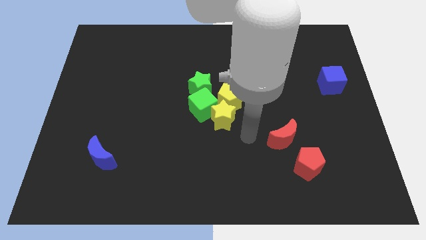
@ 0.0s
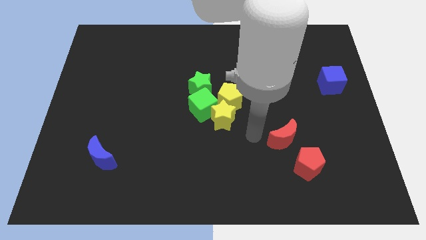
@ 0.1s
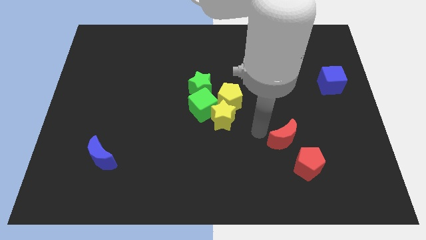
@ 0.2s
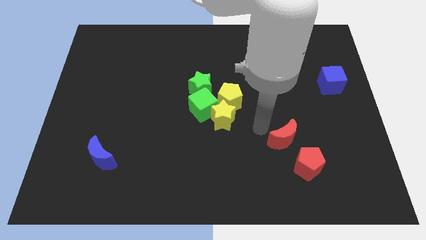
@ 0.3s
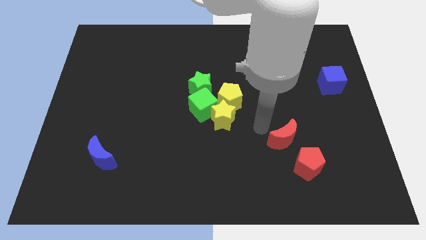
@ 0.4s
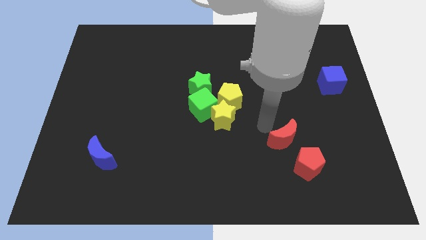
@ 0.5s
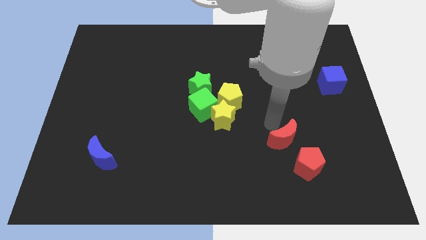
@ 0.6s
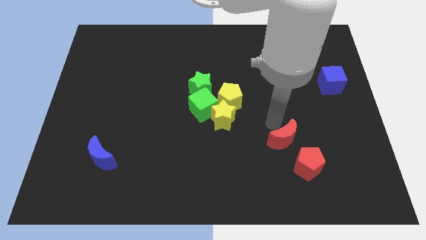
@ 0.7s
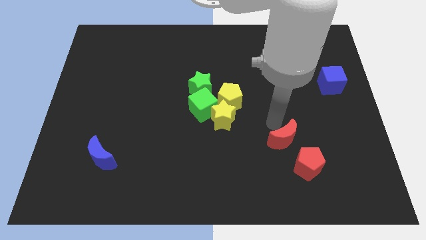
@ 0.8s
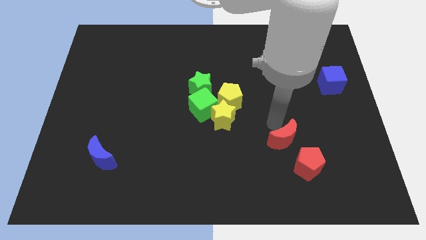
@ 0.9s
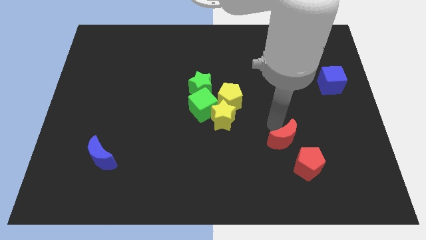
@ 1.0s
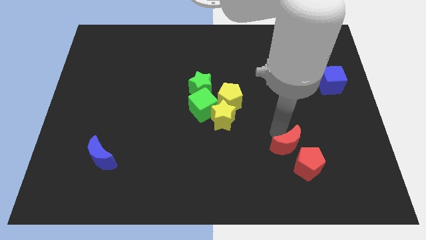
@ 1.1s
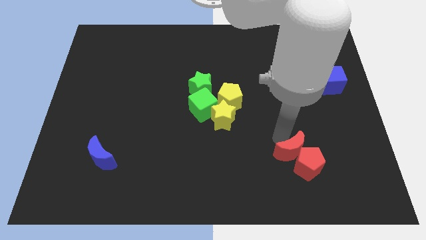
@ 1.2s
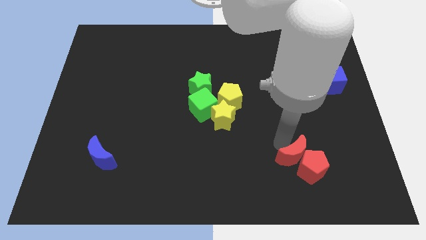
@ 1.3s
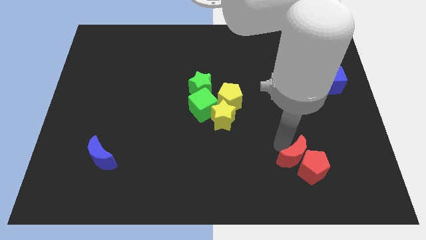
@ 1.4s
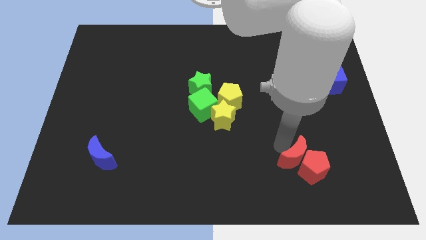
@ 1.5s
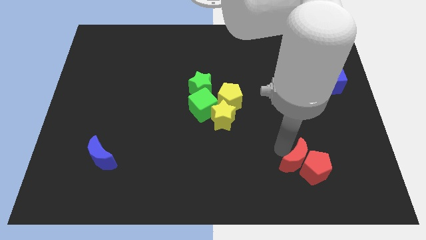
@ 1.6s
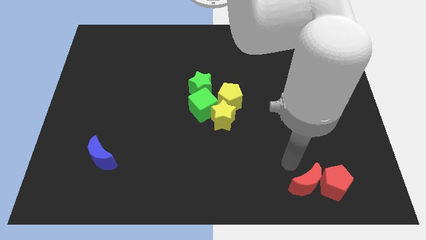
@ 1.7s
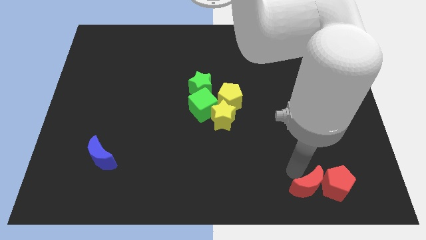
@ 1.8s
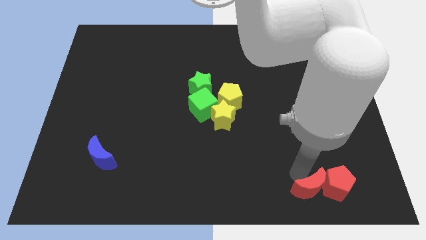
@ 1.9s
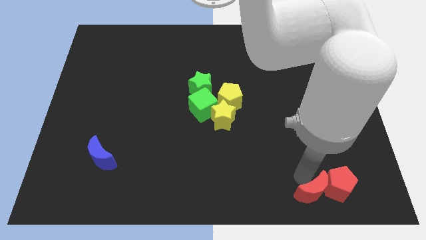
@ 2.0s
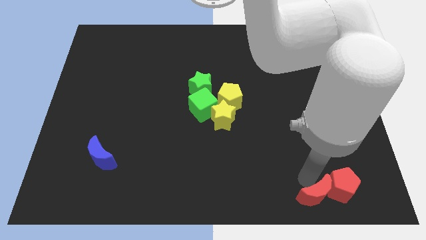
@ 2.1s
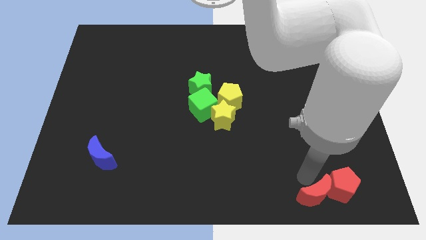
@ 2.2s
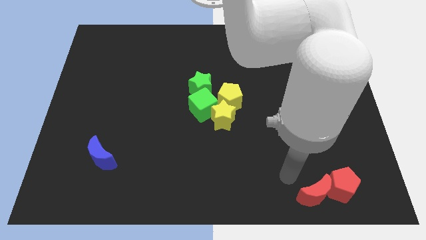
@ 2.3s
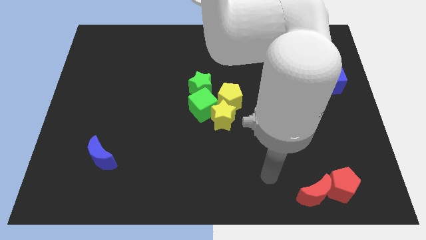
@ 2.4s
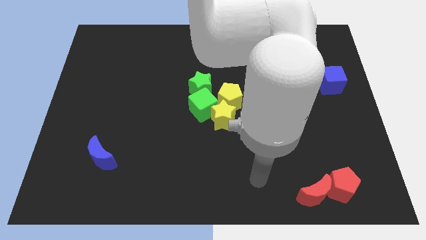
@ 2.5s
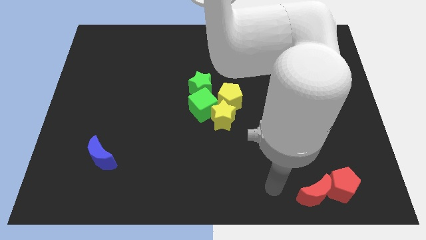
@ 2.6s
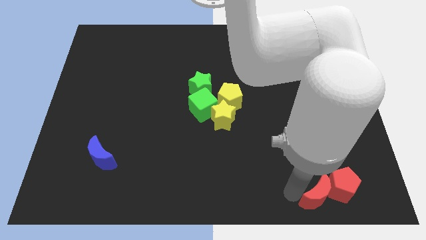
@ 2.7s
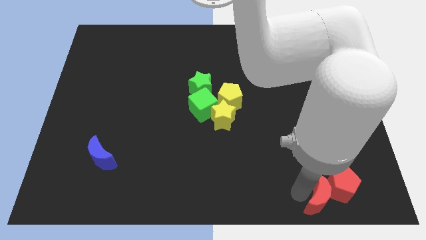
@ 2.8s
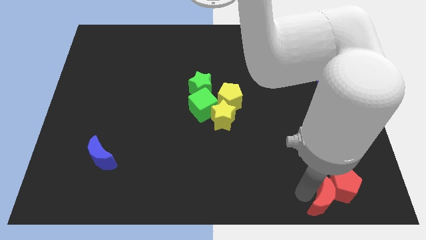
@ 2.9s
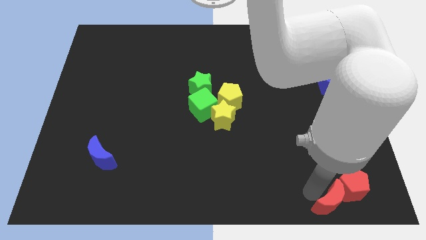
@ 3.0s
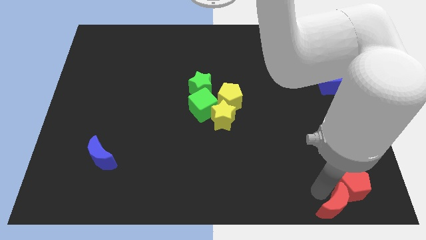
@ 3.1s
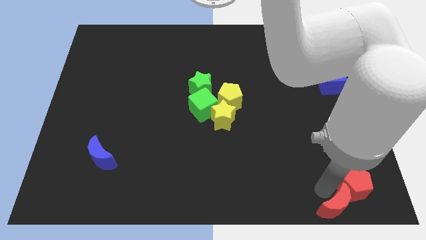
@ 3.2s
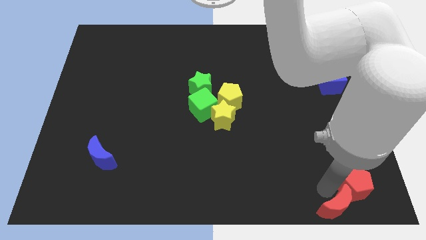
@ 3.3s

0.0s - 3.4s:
push the red crescent into the red pentagon

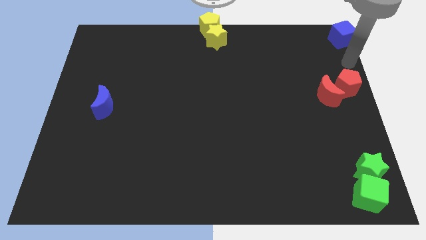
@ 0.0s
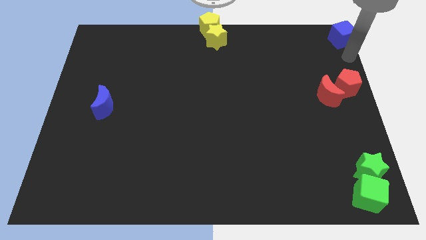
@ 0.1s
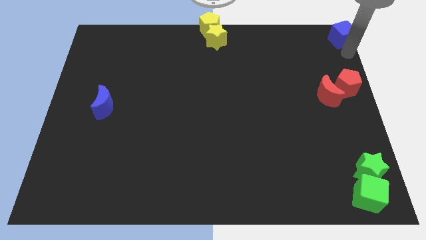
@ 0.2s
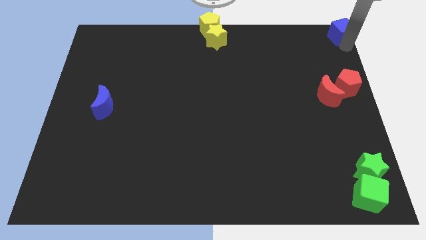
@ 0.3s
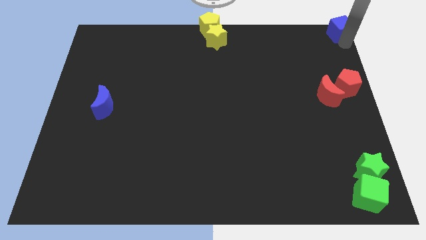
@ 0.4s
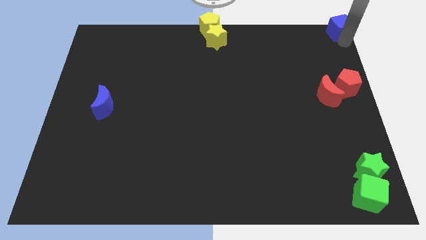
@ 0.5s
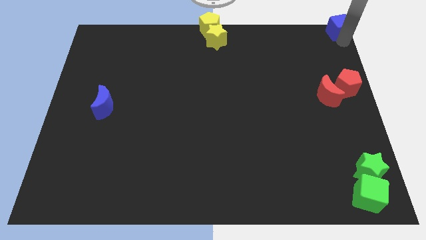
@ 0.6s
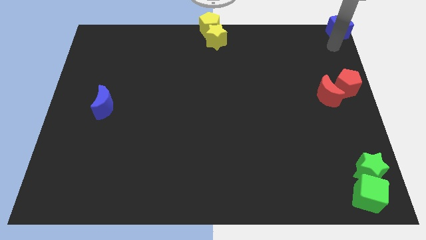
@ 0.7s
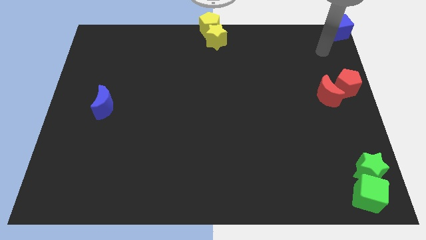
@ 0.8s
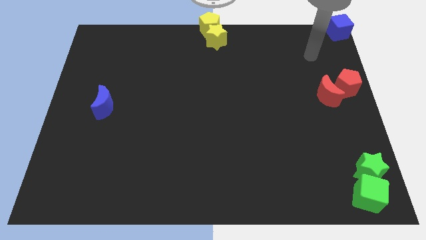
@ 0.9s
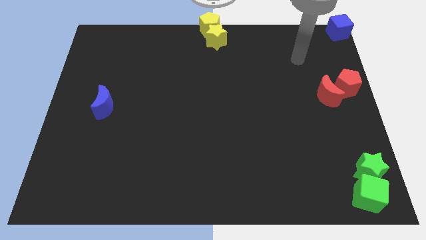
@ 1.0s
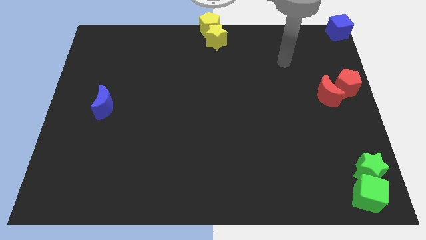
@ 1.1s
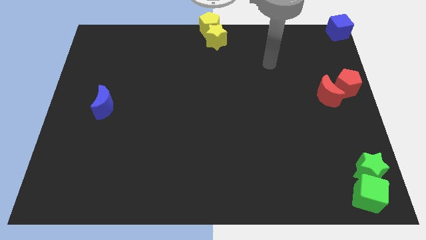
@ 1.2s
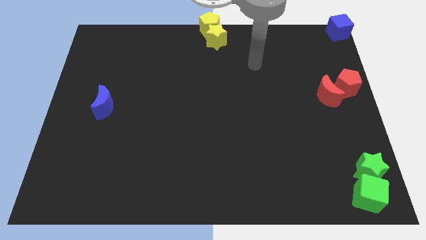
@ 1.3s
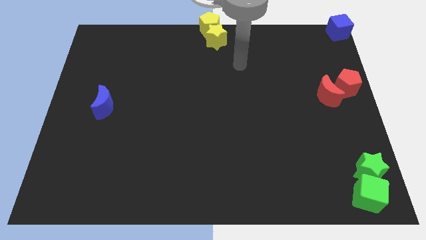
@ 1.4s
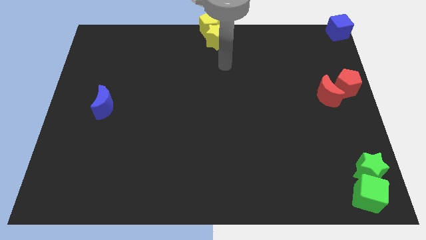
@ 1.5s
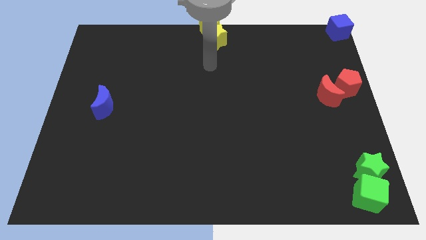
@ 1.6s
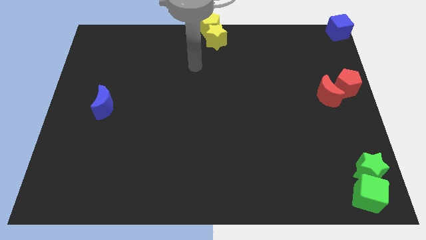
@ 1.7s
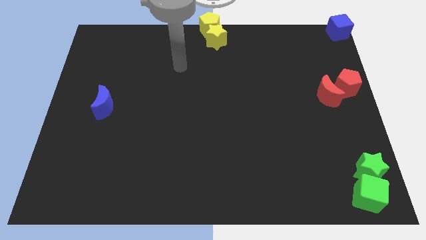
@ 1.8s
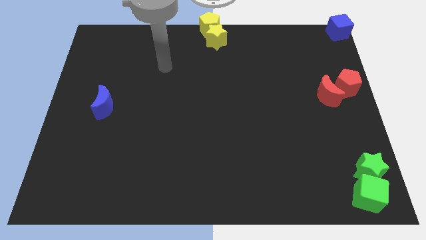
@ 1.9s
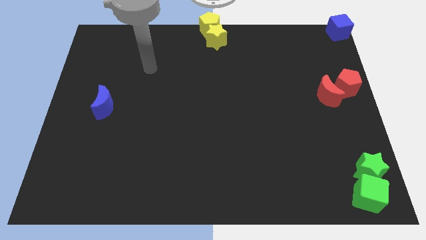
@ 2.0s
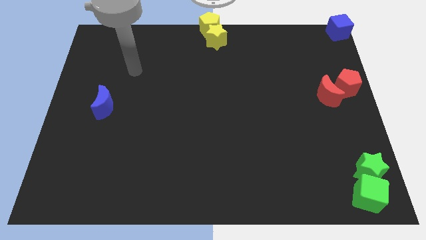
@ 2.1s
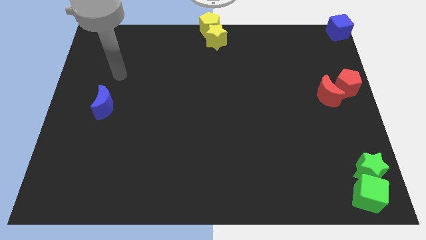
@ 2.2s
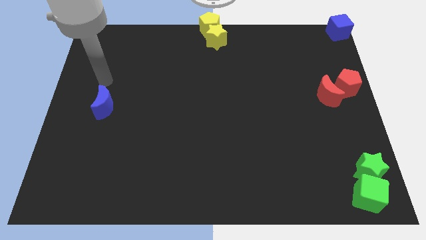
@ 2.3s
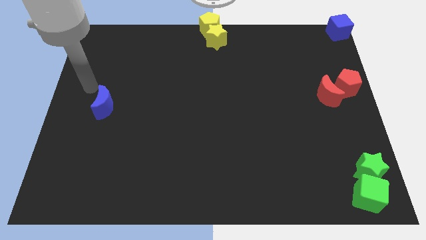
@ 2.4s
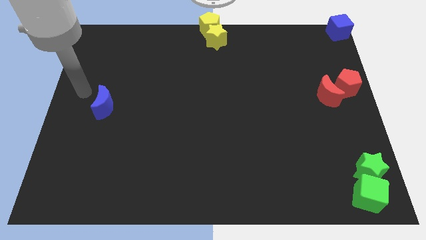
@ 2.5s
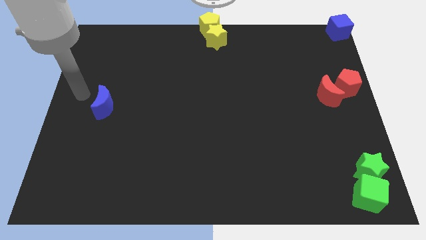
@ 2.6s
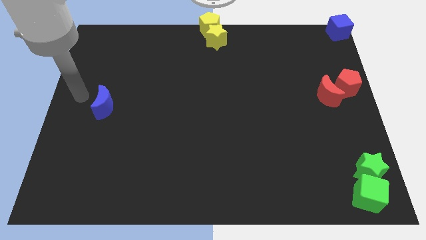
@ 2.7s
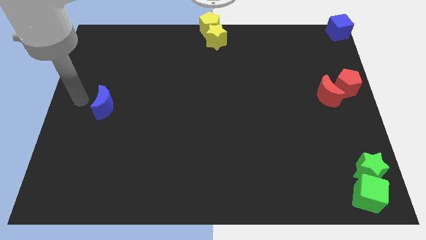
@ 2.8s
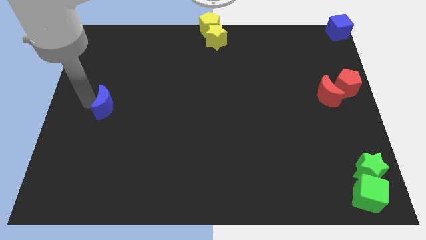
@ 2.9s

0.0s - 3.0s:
move the arm to the left side of the blue moon

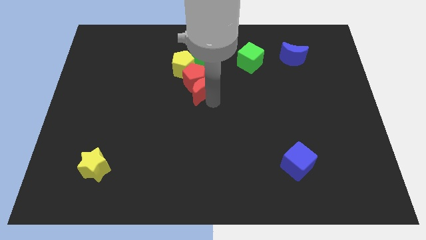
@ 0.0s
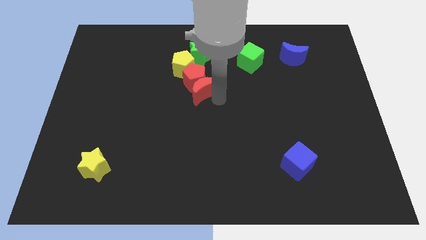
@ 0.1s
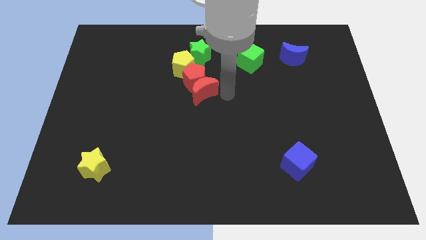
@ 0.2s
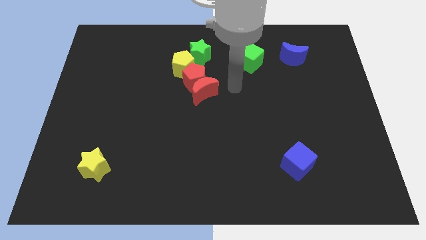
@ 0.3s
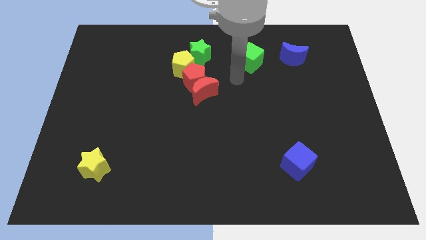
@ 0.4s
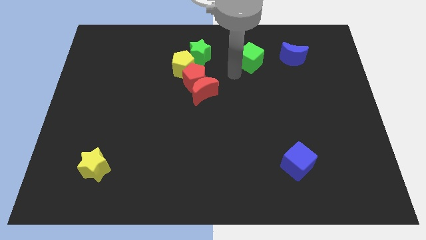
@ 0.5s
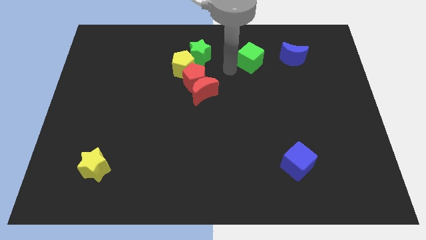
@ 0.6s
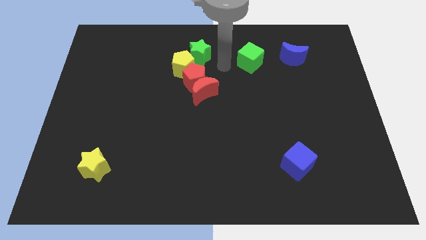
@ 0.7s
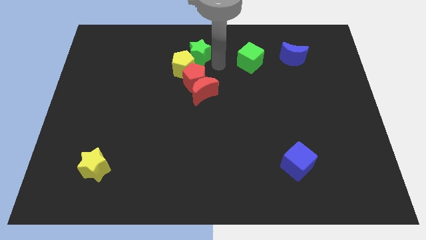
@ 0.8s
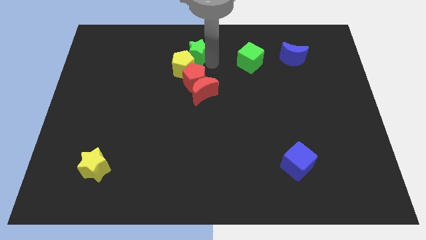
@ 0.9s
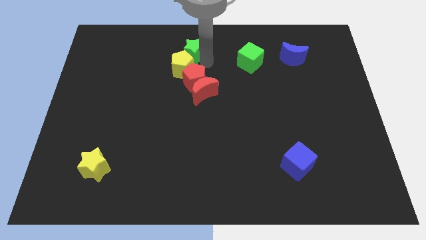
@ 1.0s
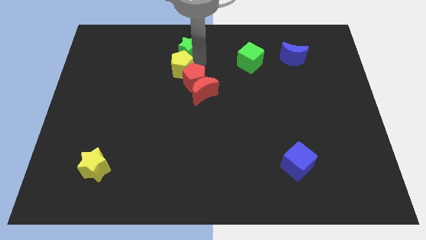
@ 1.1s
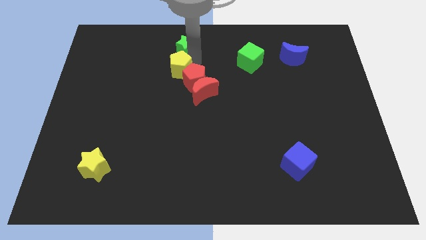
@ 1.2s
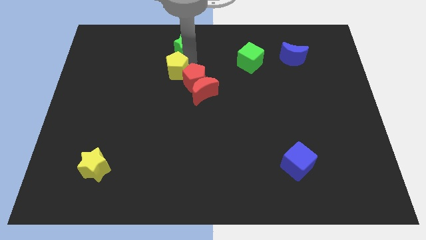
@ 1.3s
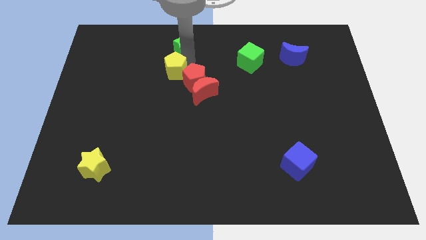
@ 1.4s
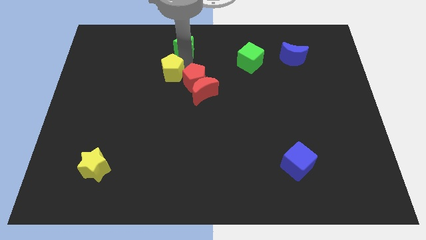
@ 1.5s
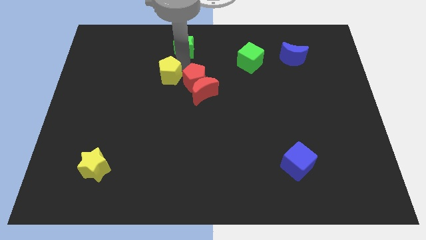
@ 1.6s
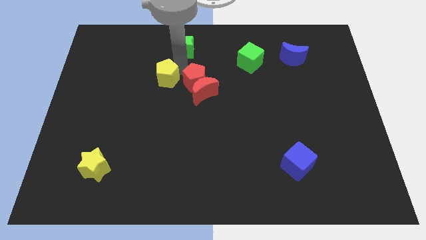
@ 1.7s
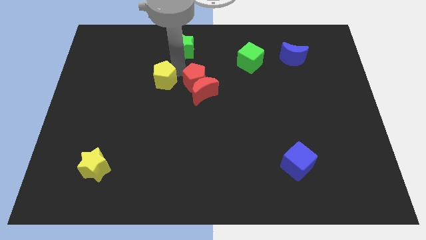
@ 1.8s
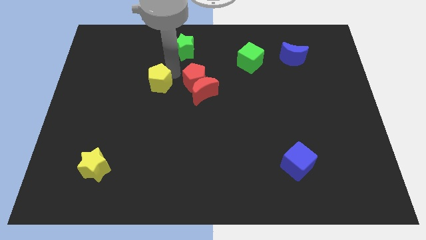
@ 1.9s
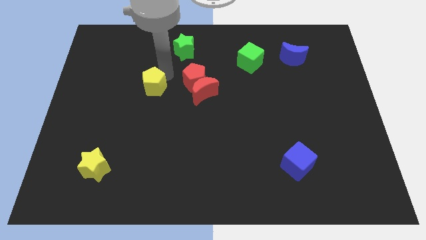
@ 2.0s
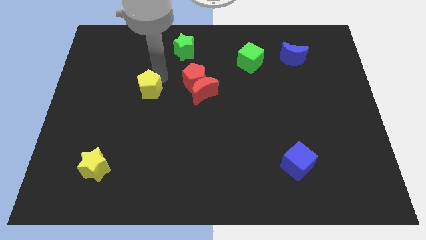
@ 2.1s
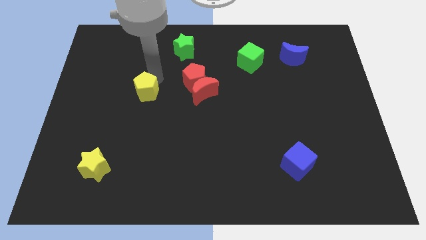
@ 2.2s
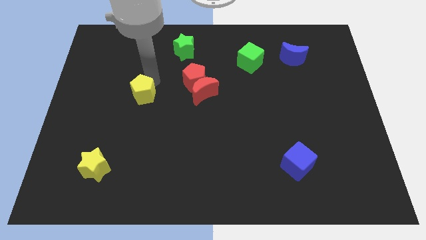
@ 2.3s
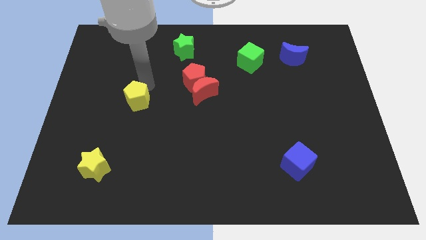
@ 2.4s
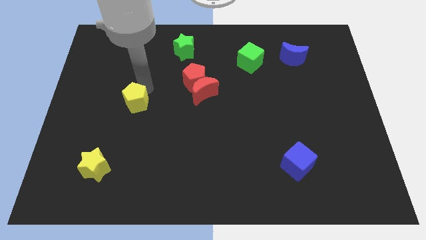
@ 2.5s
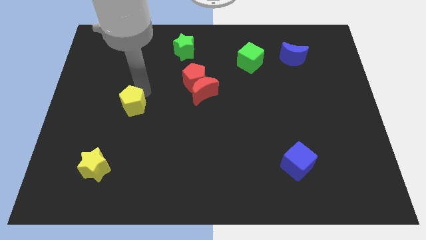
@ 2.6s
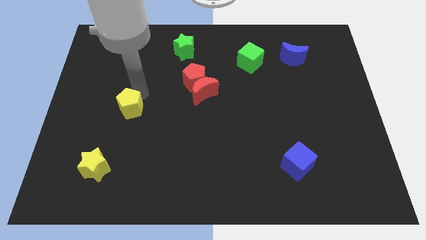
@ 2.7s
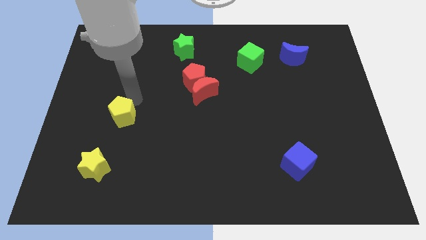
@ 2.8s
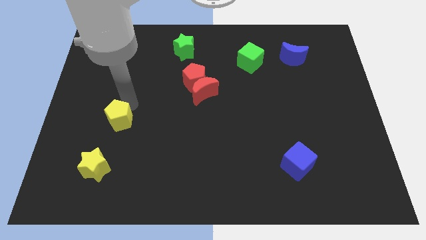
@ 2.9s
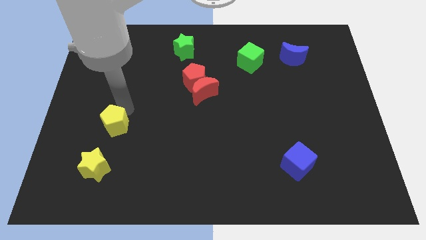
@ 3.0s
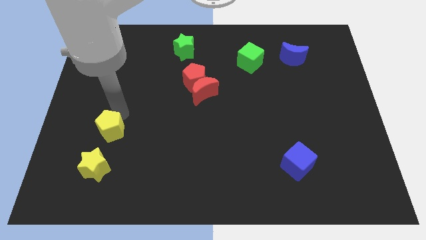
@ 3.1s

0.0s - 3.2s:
move the yellow pentagon away from red pentagon
